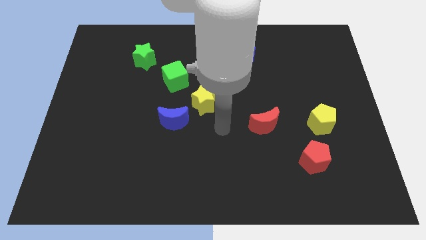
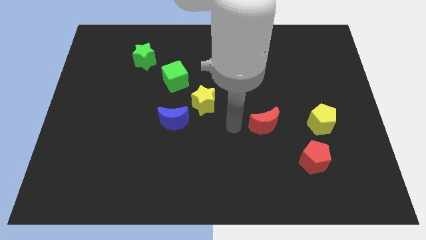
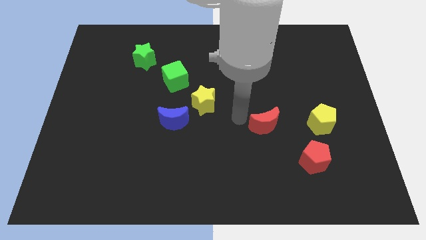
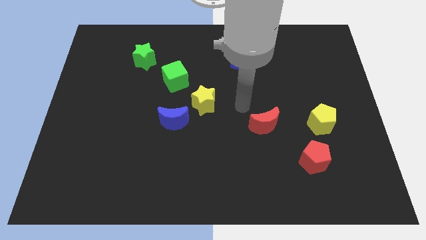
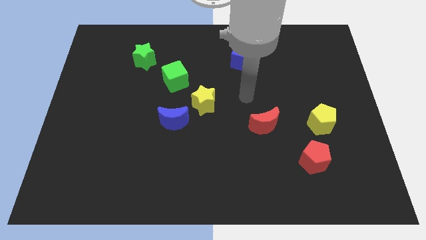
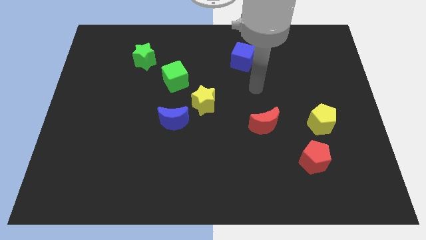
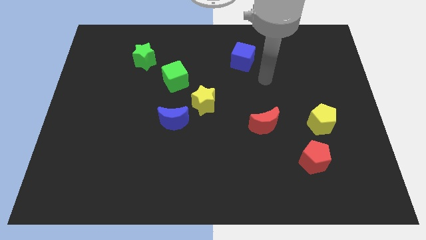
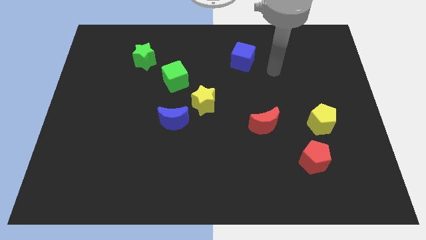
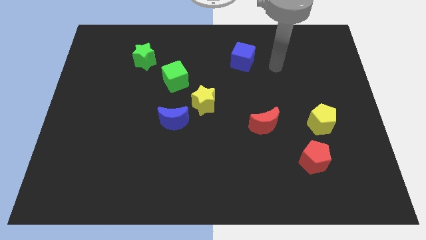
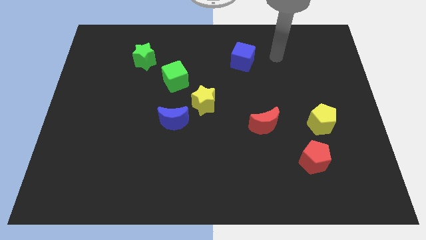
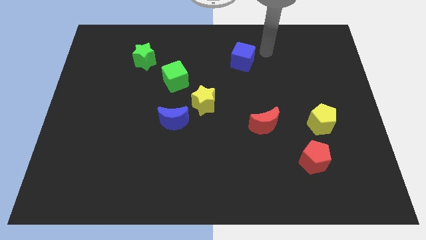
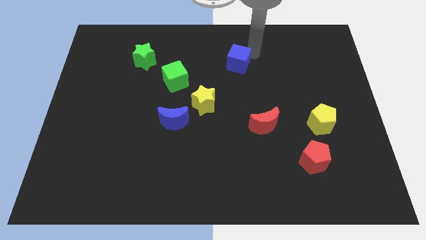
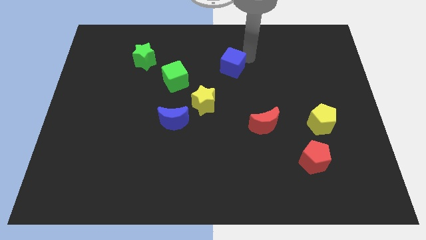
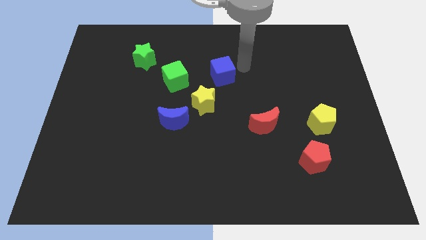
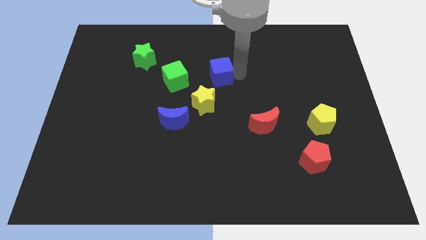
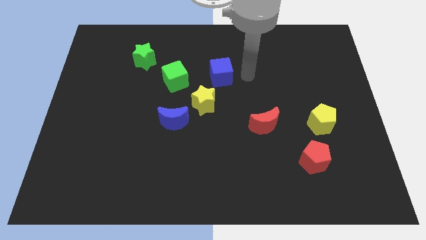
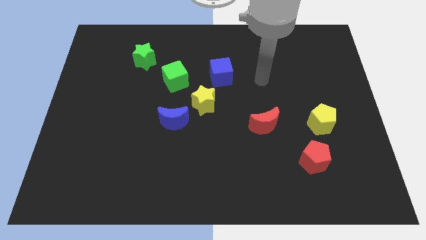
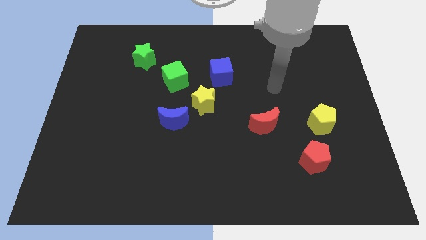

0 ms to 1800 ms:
move arm away from yellow star

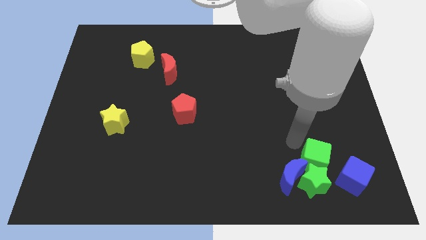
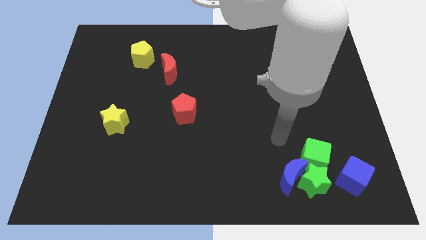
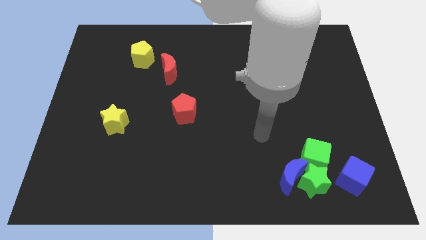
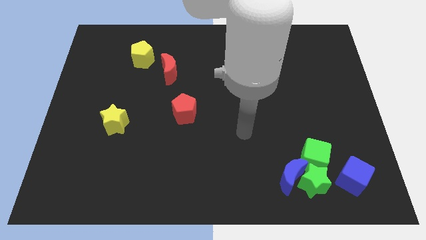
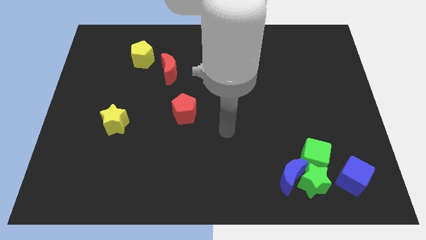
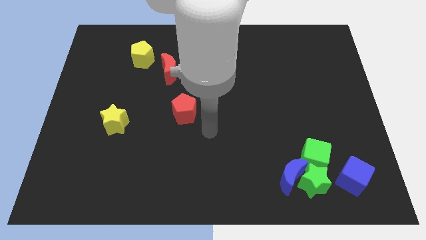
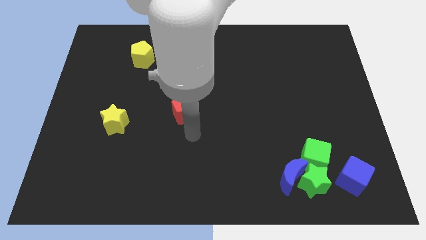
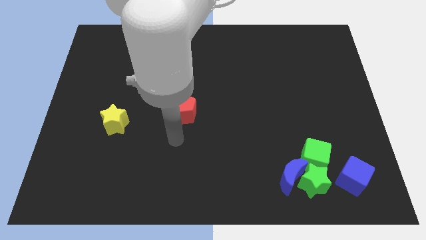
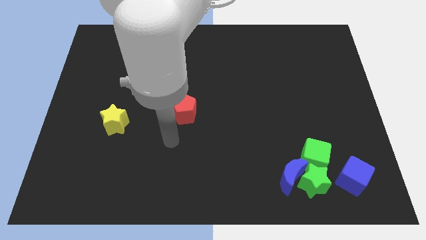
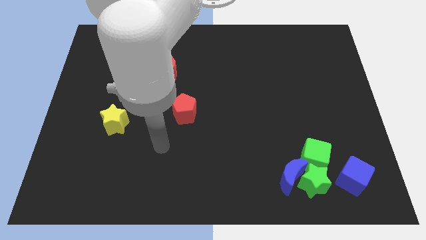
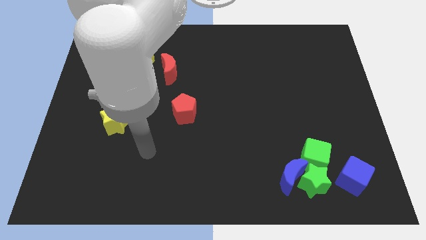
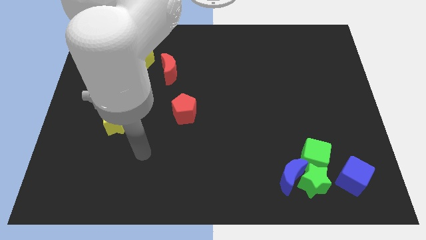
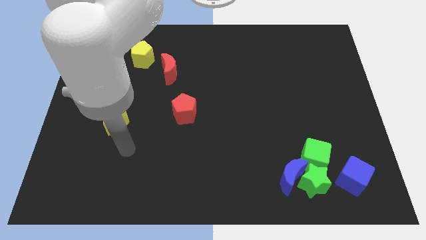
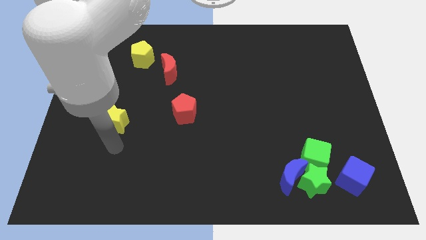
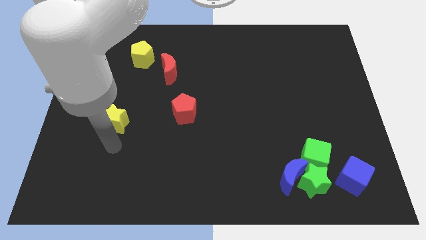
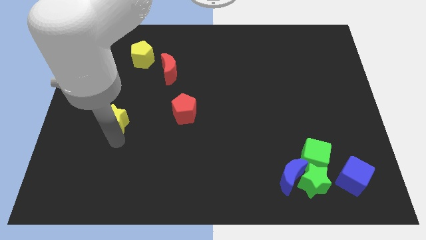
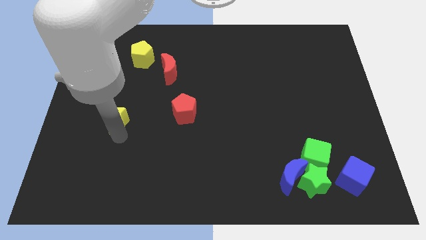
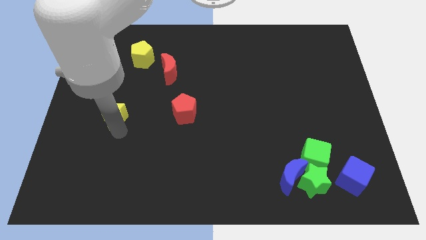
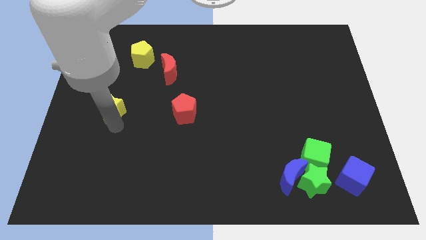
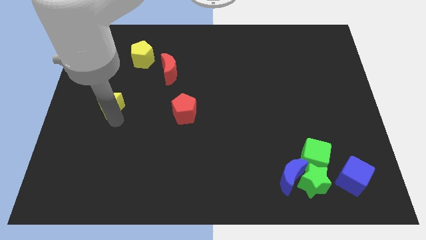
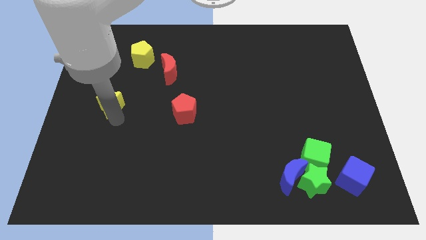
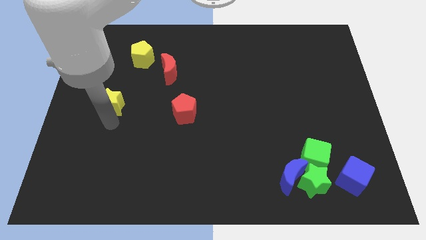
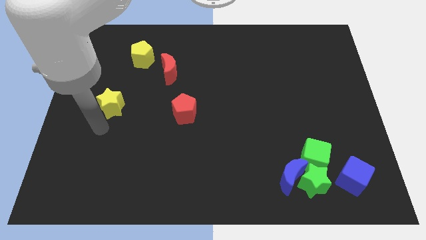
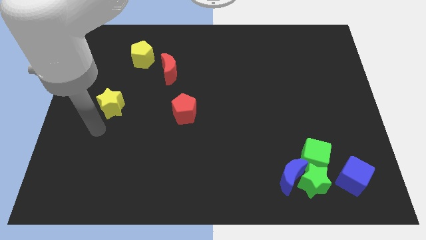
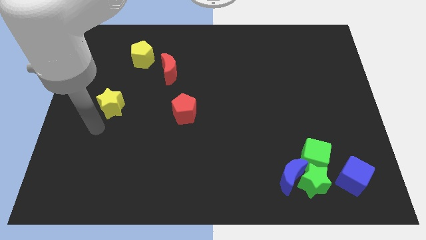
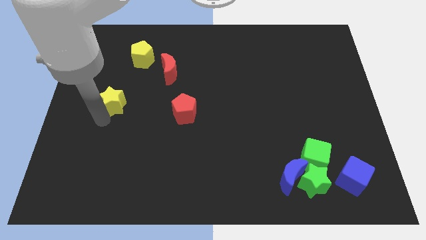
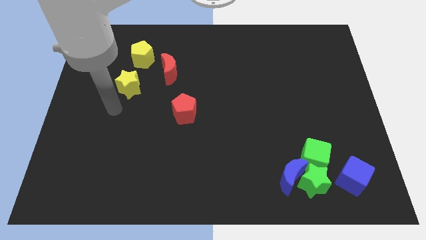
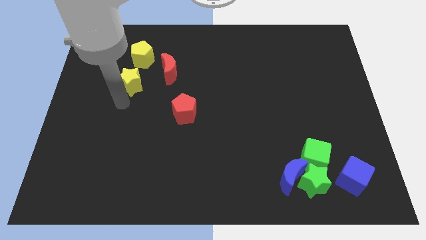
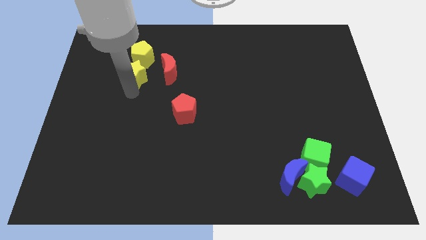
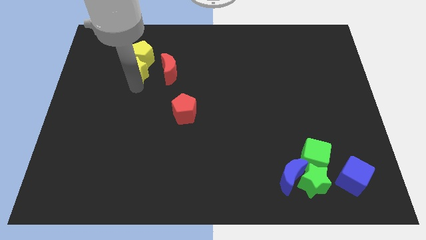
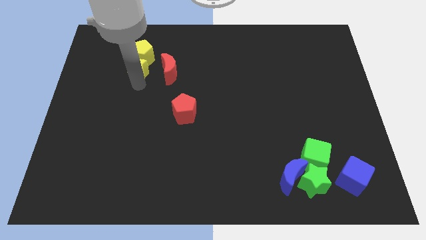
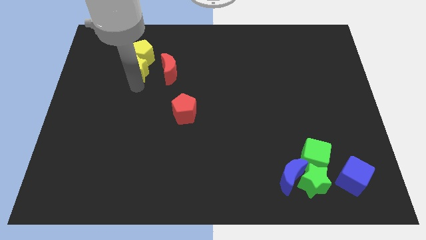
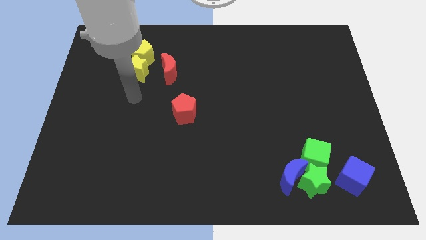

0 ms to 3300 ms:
place the yellow star to the left of the red crescent

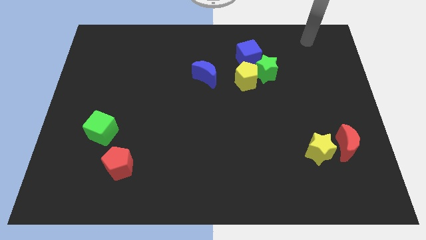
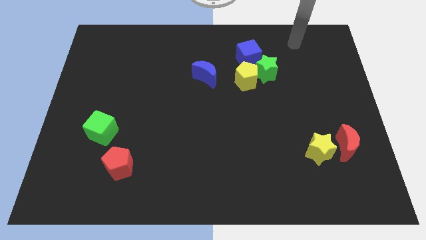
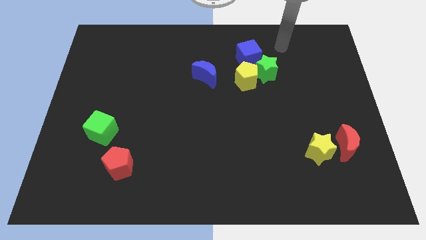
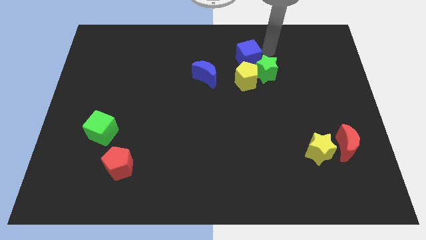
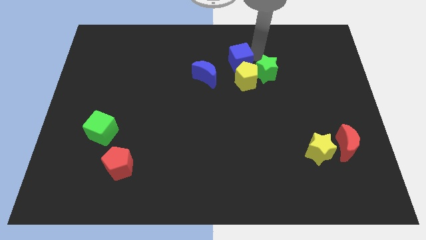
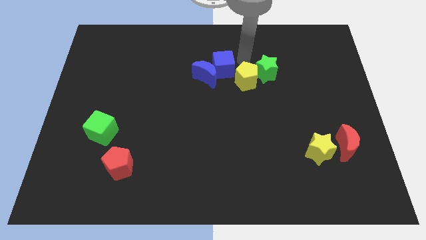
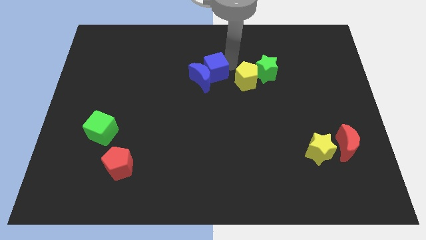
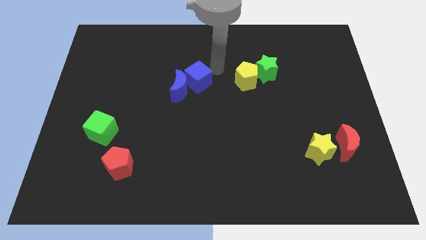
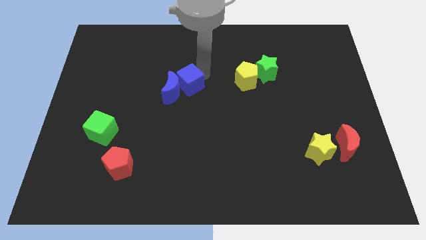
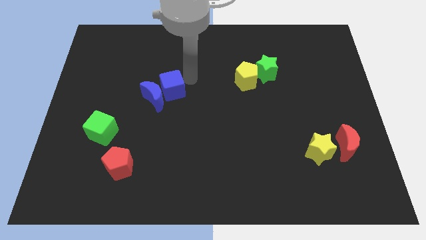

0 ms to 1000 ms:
slide blue blocks diagonally to green cube

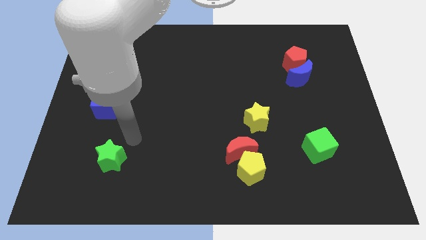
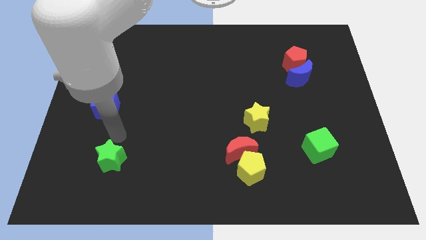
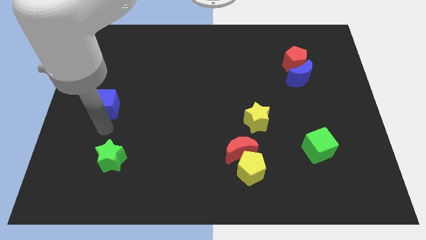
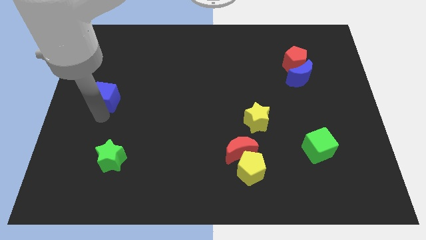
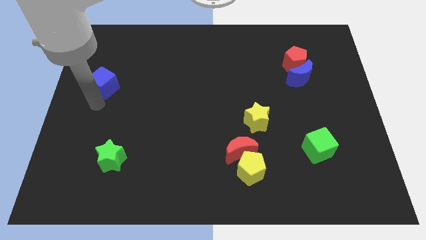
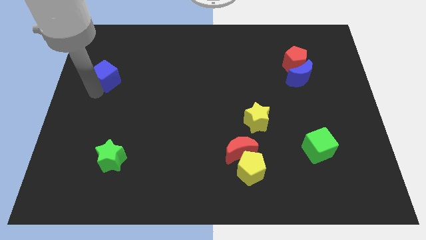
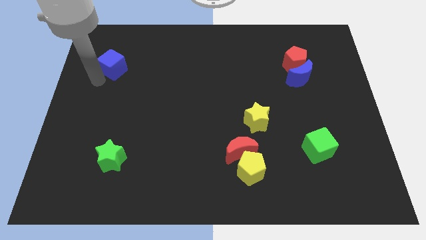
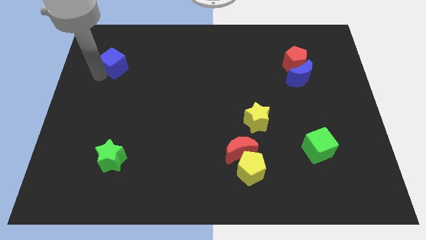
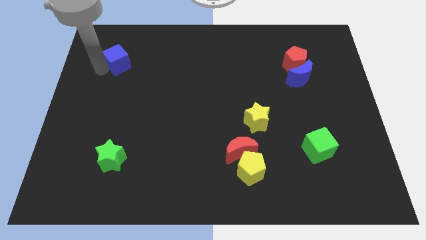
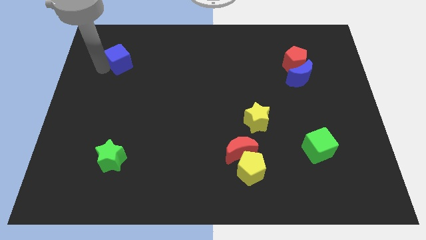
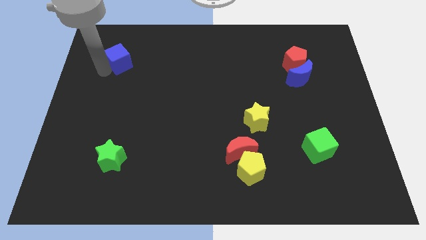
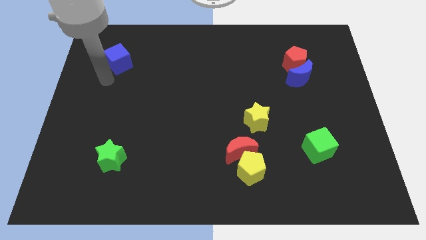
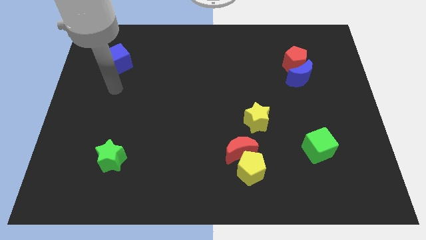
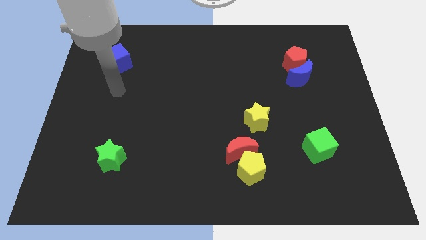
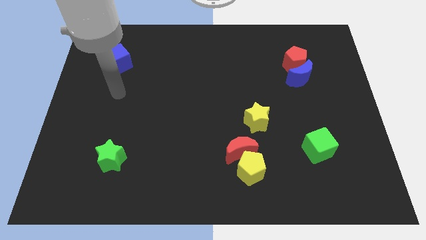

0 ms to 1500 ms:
move the blue cube towards the top left of the board

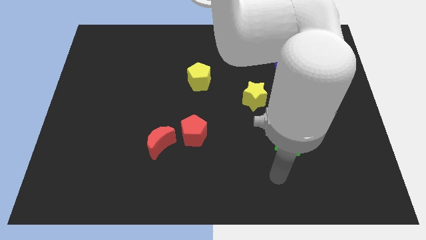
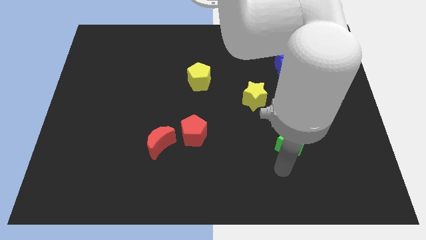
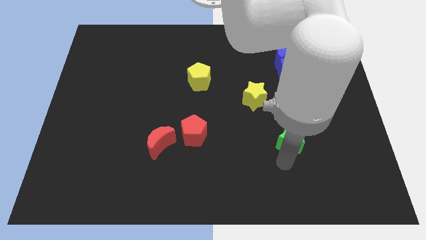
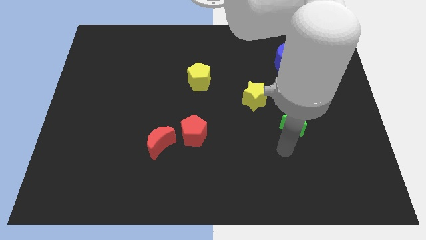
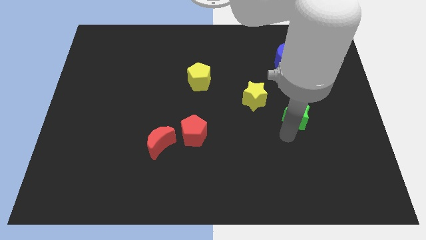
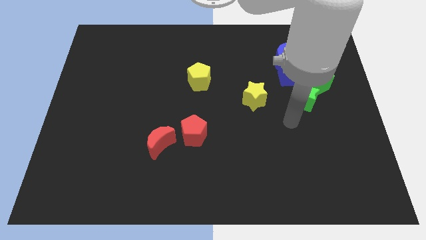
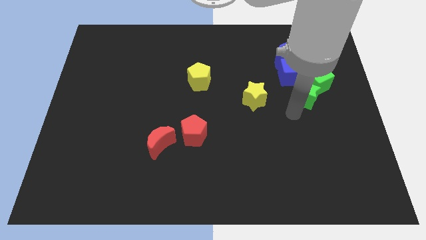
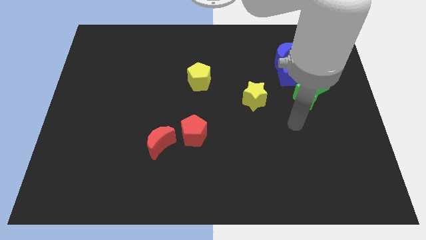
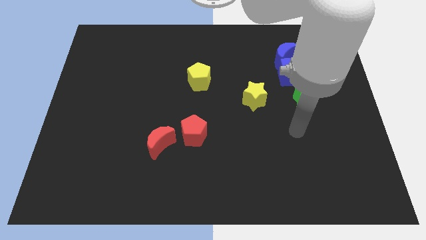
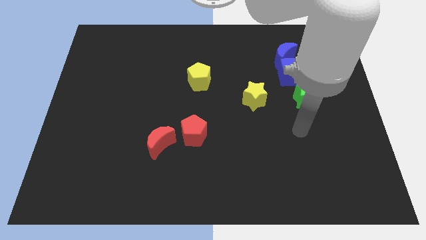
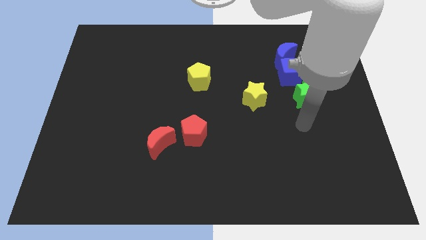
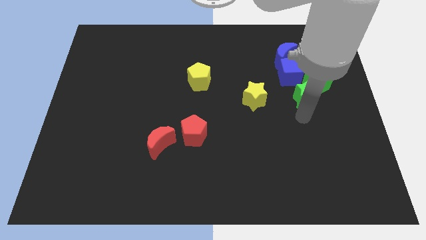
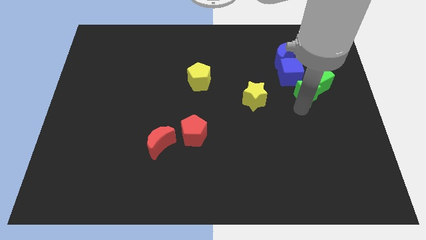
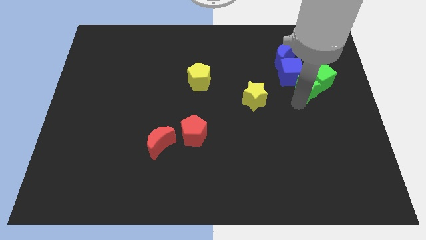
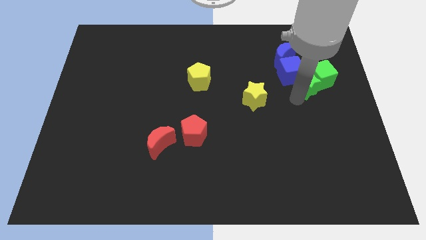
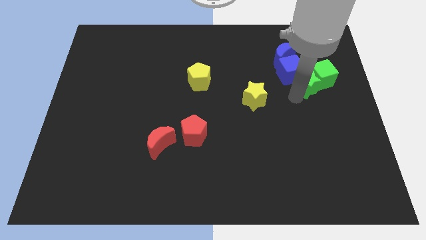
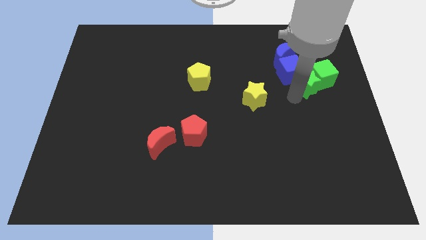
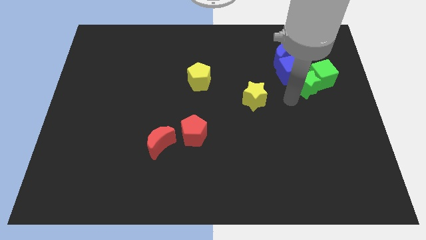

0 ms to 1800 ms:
push the green star to the bottom left side of the green cube
